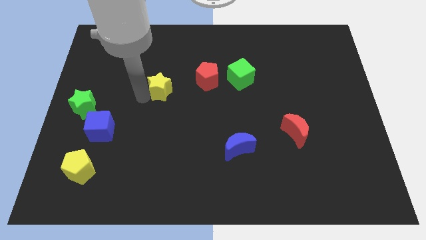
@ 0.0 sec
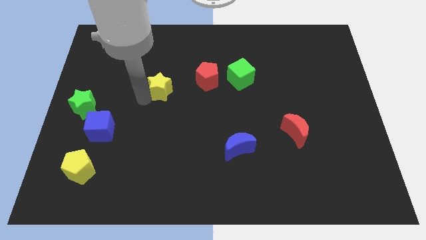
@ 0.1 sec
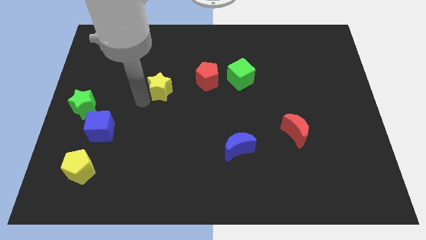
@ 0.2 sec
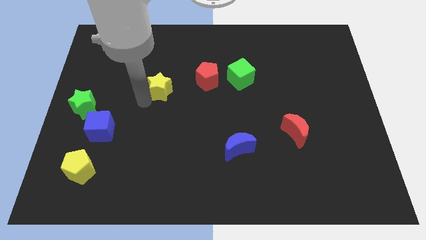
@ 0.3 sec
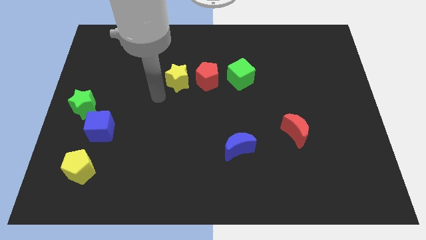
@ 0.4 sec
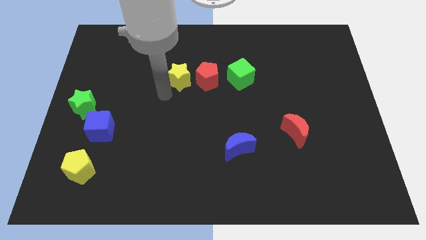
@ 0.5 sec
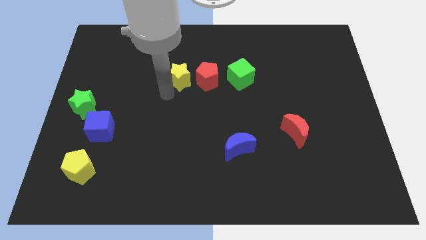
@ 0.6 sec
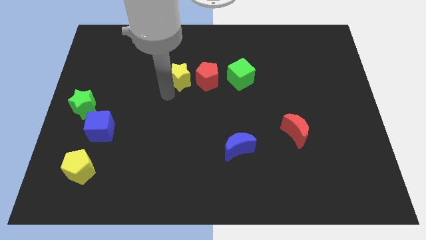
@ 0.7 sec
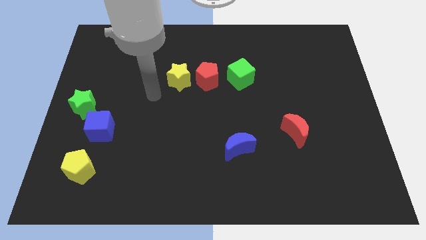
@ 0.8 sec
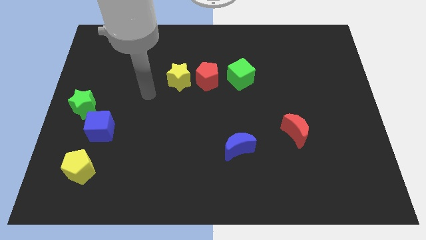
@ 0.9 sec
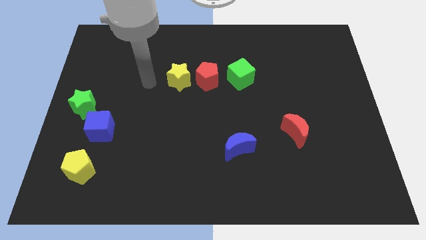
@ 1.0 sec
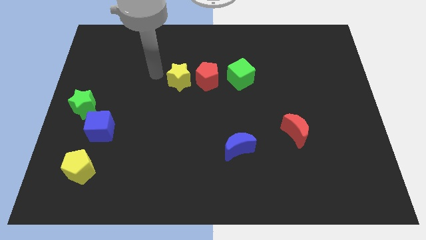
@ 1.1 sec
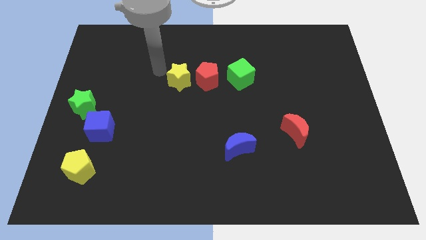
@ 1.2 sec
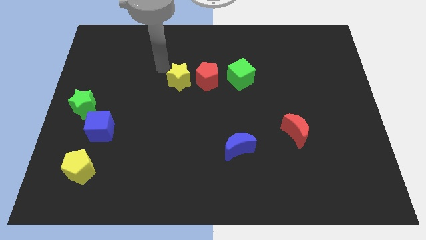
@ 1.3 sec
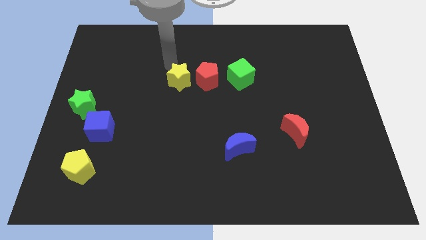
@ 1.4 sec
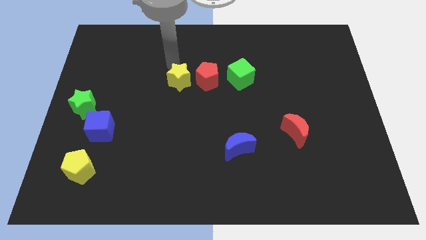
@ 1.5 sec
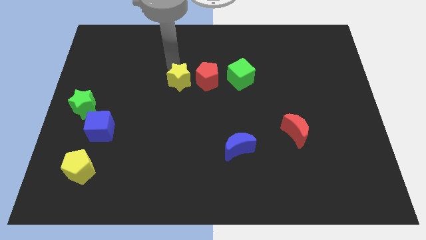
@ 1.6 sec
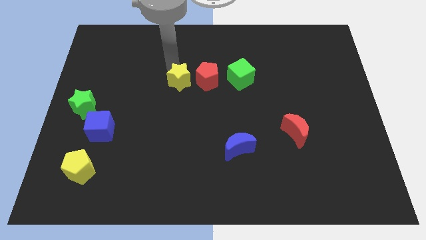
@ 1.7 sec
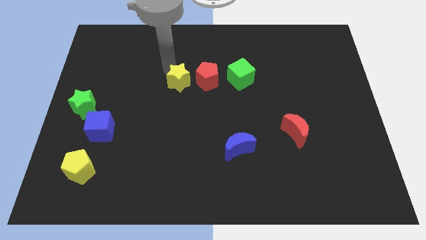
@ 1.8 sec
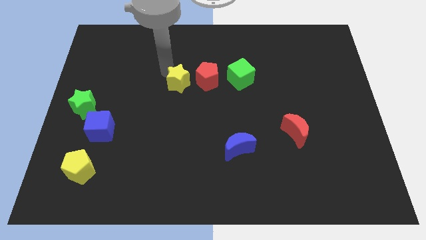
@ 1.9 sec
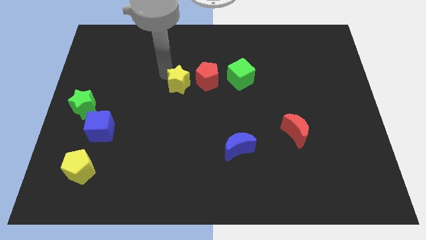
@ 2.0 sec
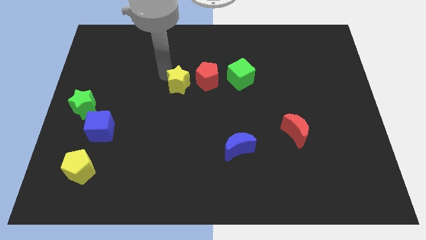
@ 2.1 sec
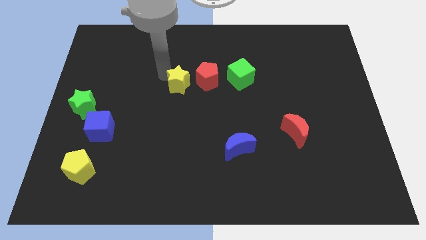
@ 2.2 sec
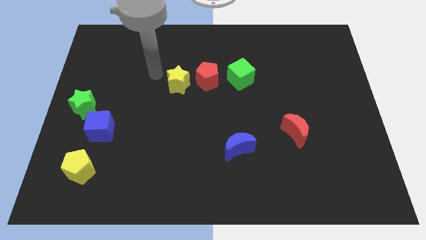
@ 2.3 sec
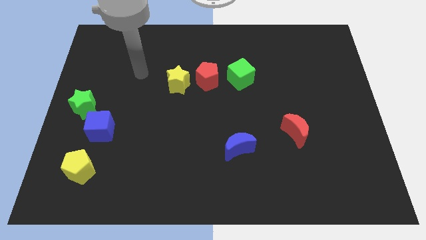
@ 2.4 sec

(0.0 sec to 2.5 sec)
slide the yellow star to the left of red pentagon

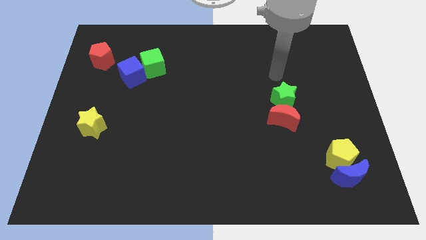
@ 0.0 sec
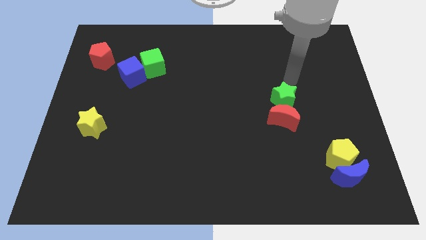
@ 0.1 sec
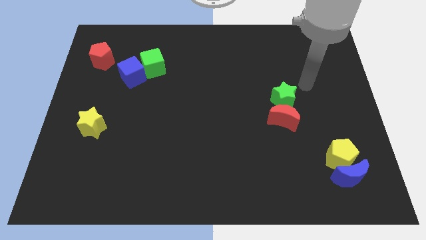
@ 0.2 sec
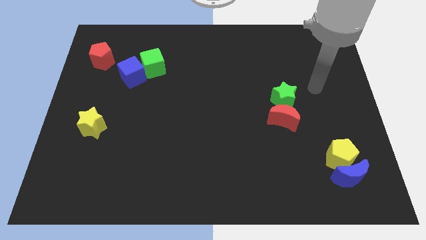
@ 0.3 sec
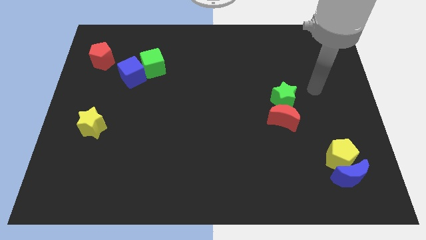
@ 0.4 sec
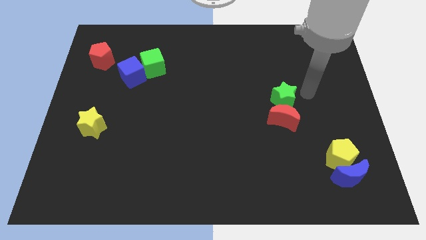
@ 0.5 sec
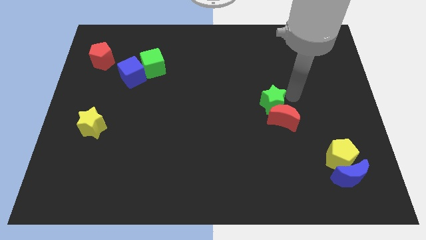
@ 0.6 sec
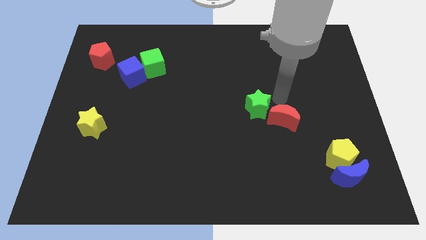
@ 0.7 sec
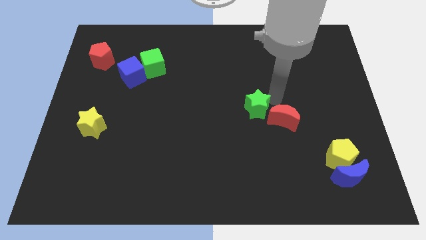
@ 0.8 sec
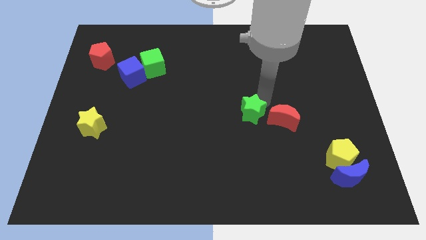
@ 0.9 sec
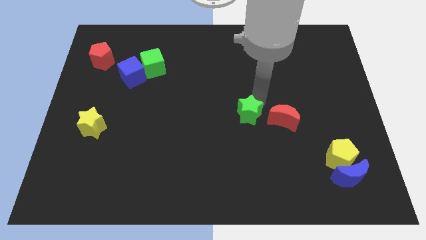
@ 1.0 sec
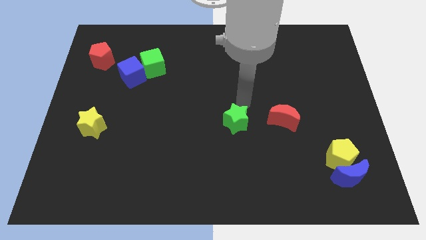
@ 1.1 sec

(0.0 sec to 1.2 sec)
push the green star to the left of the red crescent

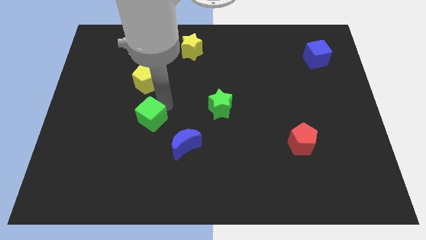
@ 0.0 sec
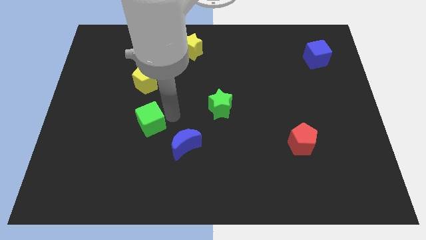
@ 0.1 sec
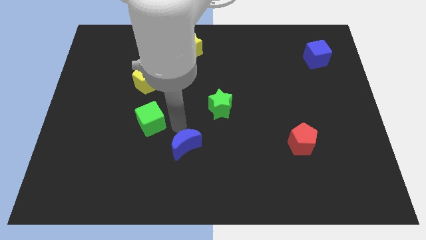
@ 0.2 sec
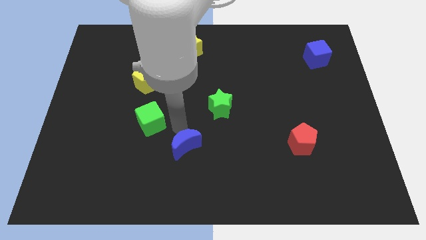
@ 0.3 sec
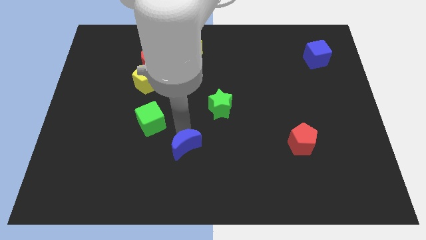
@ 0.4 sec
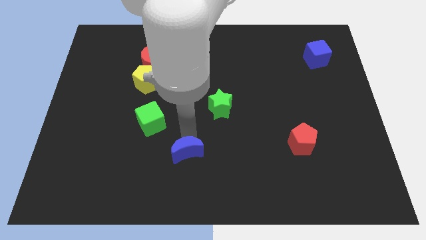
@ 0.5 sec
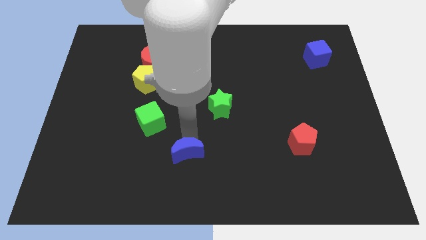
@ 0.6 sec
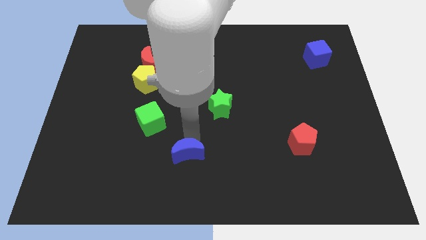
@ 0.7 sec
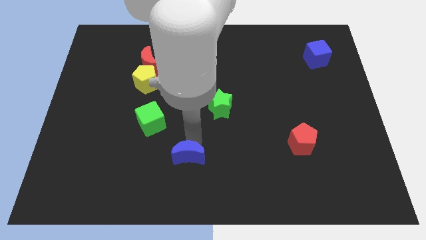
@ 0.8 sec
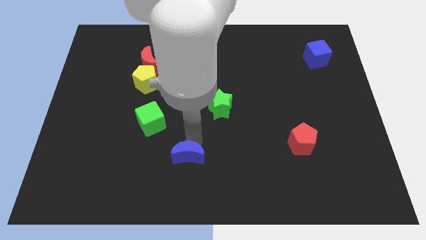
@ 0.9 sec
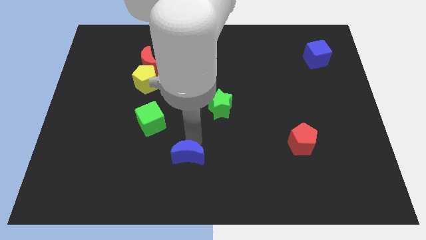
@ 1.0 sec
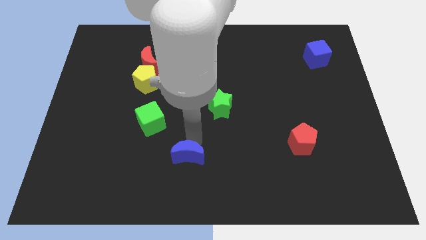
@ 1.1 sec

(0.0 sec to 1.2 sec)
move the blue moon slightly down

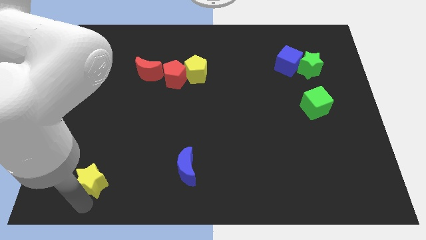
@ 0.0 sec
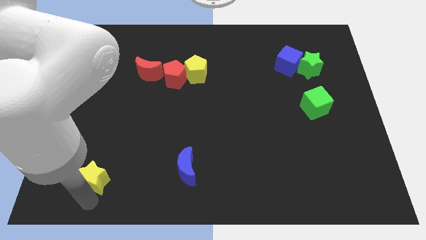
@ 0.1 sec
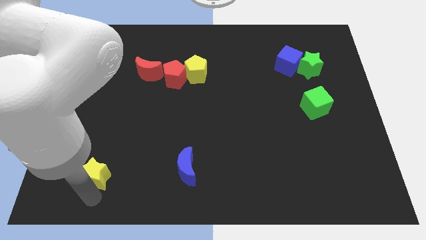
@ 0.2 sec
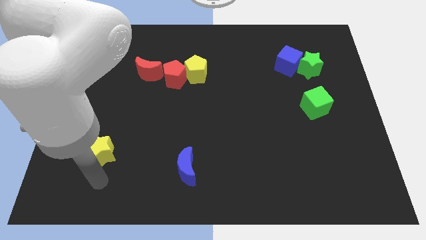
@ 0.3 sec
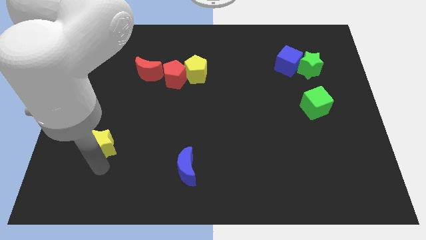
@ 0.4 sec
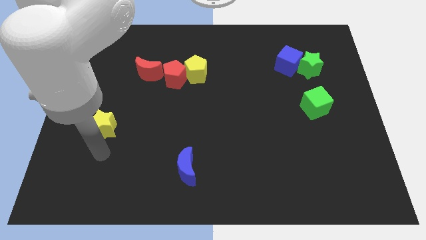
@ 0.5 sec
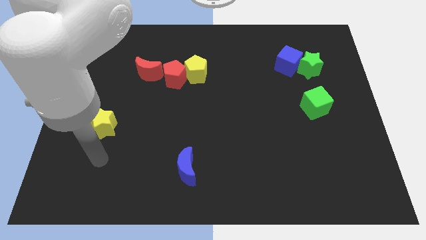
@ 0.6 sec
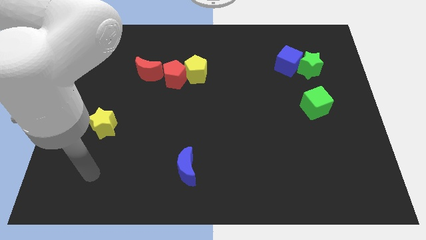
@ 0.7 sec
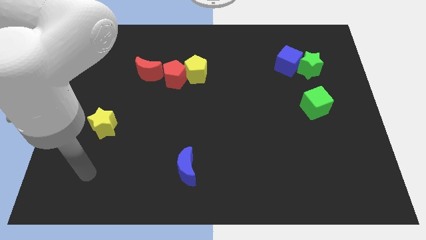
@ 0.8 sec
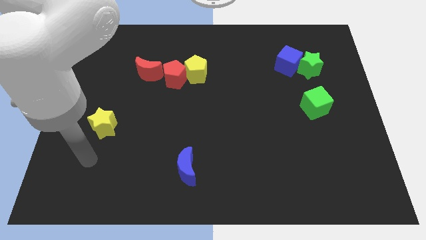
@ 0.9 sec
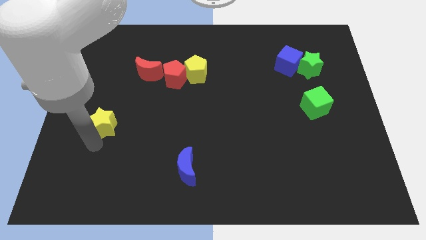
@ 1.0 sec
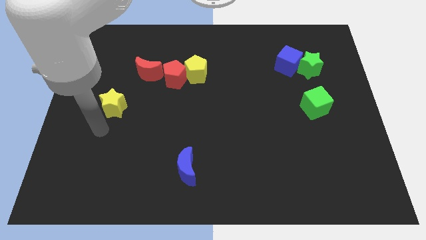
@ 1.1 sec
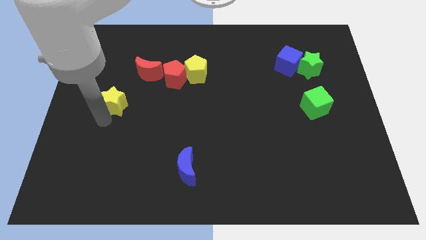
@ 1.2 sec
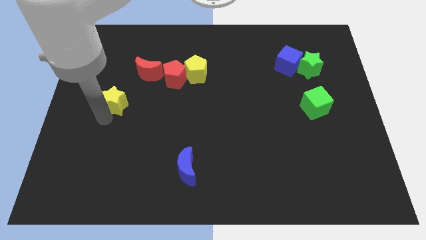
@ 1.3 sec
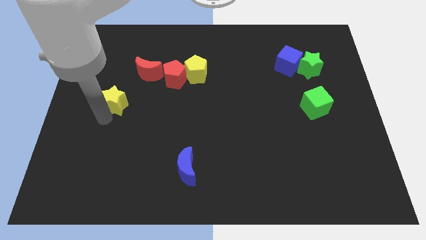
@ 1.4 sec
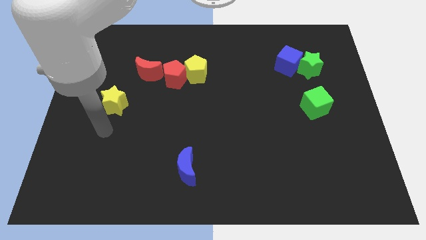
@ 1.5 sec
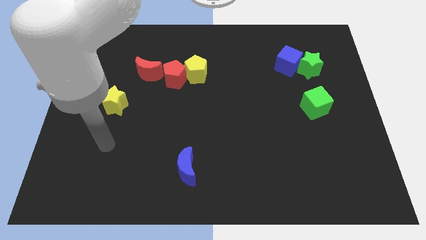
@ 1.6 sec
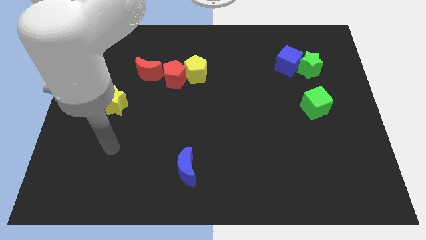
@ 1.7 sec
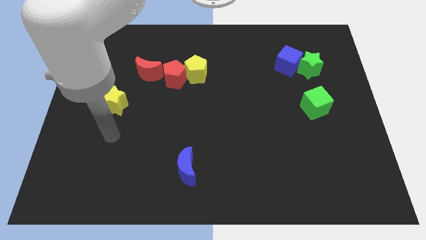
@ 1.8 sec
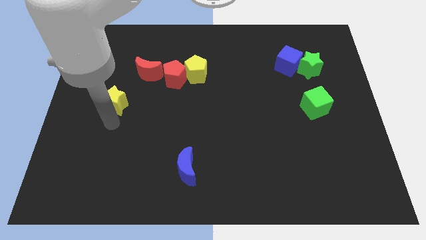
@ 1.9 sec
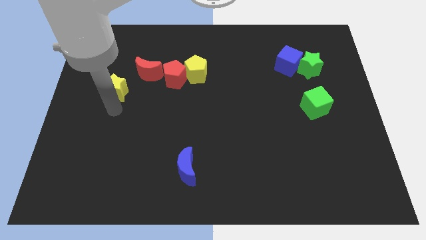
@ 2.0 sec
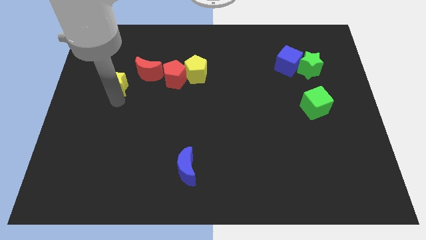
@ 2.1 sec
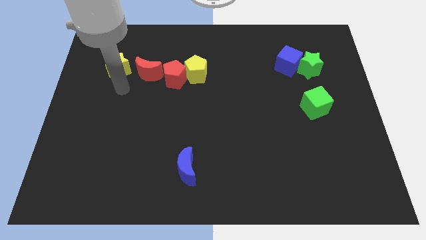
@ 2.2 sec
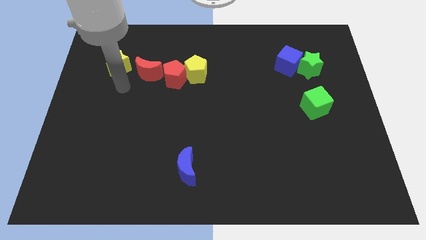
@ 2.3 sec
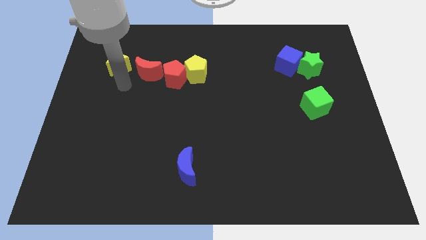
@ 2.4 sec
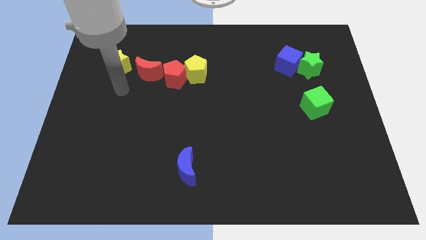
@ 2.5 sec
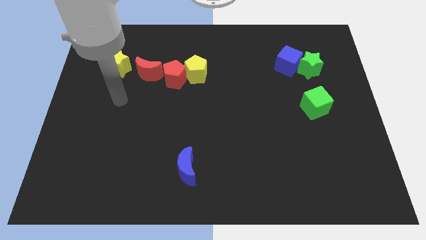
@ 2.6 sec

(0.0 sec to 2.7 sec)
move the yellow star to the left of the red crescent

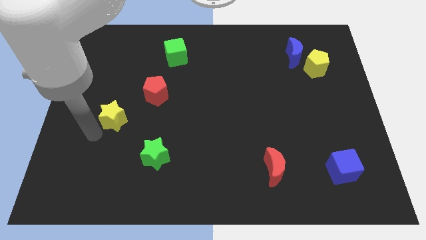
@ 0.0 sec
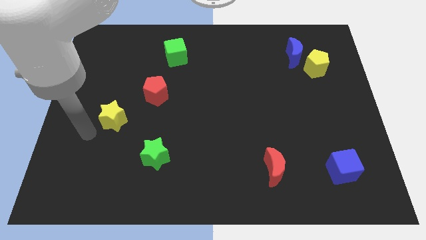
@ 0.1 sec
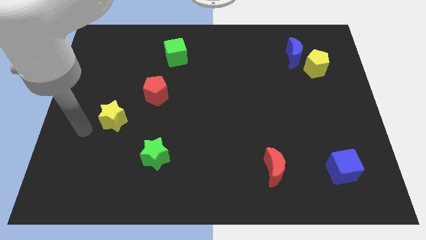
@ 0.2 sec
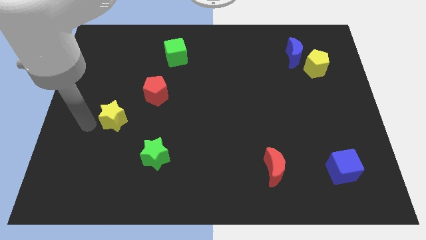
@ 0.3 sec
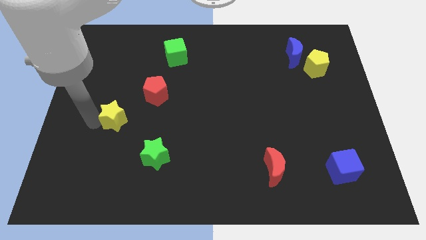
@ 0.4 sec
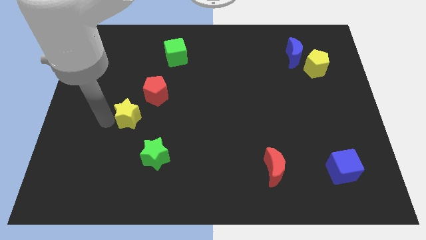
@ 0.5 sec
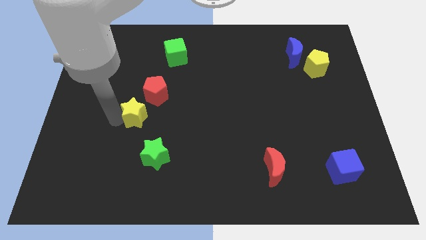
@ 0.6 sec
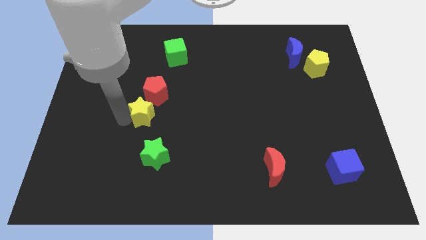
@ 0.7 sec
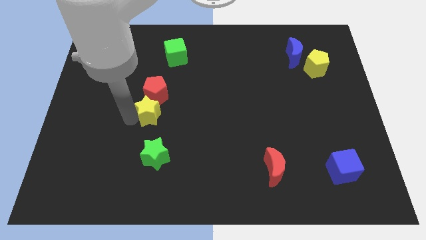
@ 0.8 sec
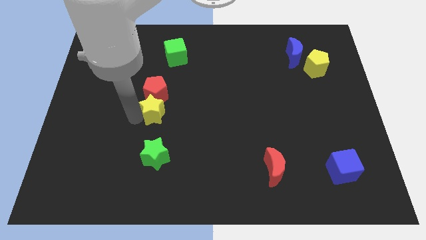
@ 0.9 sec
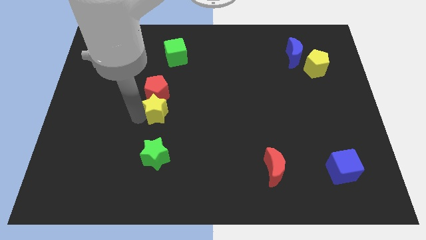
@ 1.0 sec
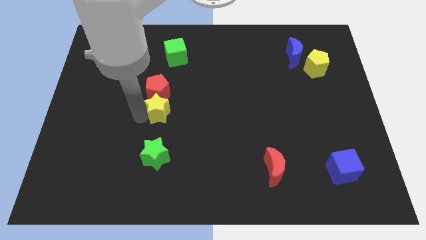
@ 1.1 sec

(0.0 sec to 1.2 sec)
place the yellow star below the red pentagon

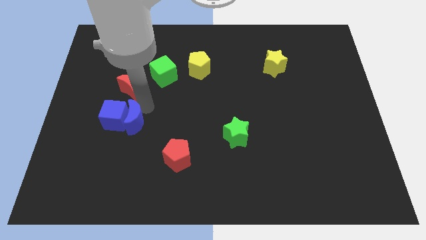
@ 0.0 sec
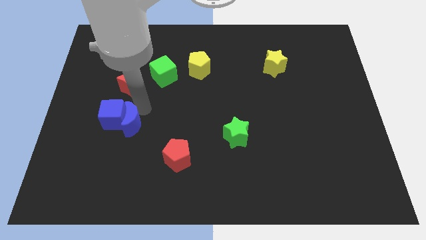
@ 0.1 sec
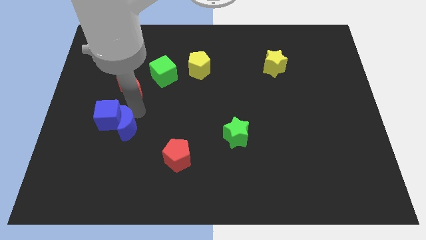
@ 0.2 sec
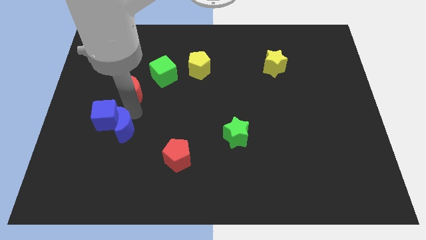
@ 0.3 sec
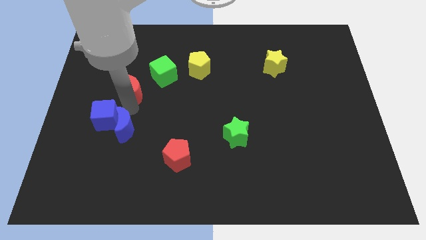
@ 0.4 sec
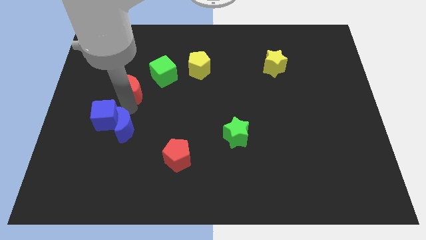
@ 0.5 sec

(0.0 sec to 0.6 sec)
push the blue crescent into the blue cube
